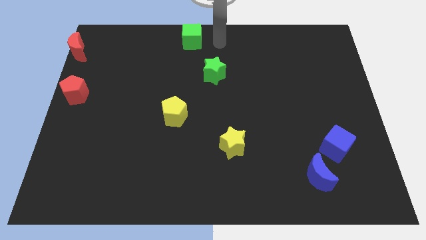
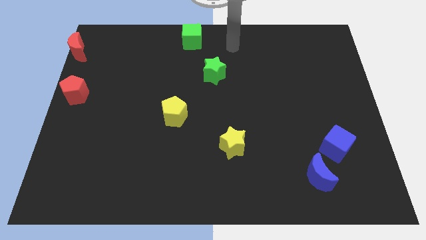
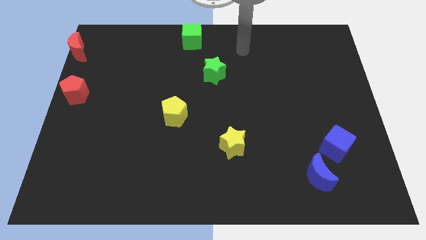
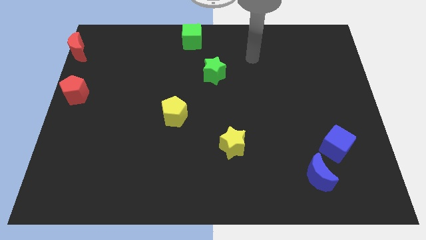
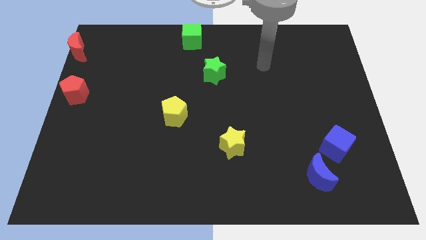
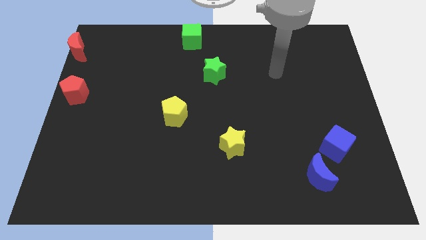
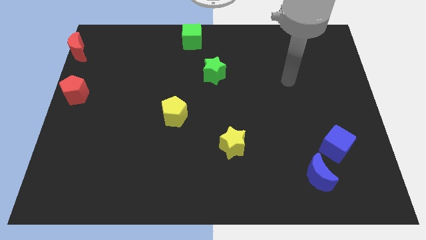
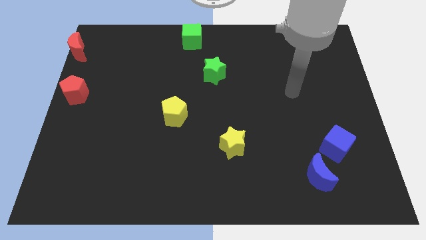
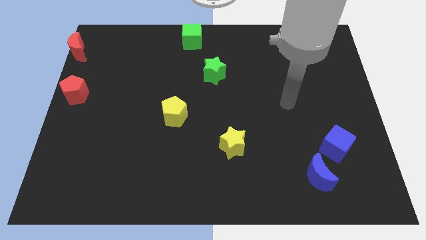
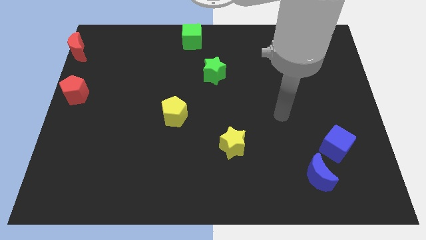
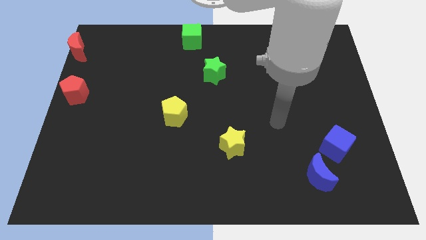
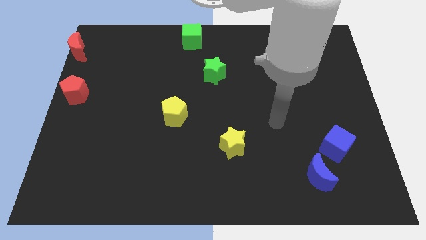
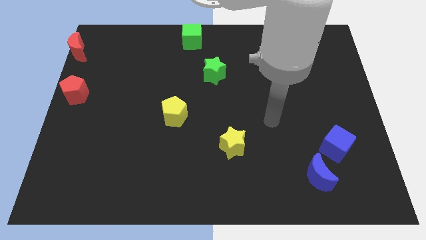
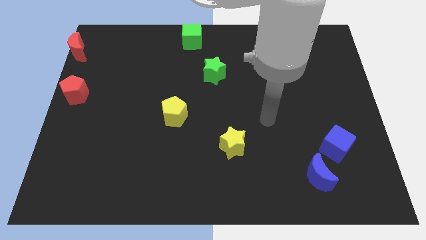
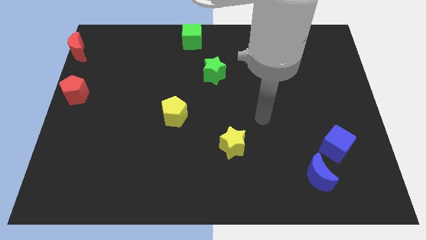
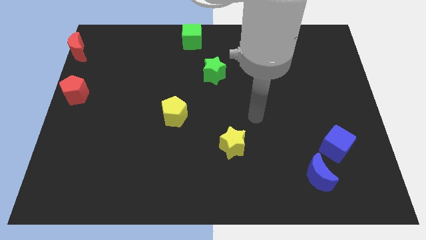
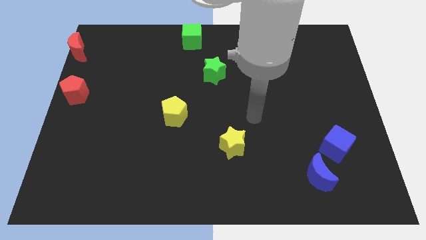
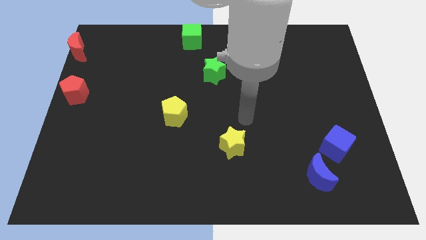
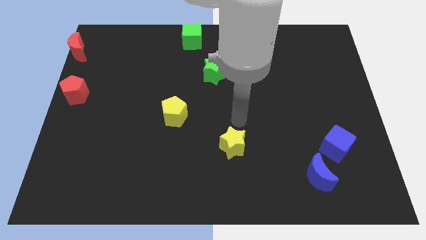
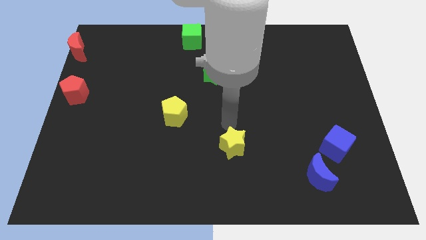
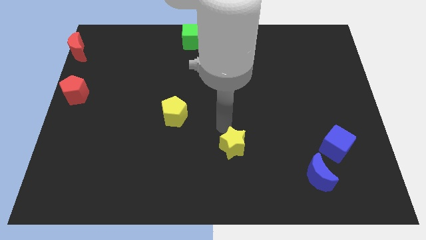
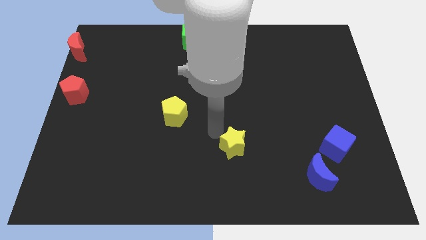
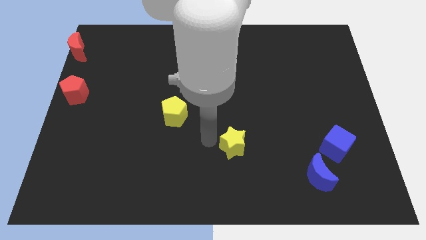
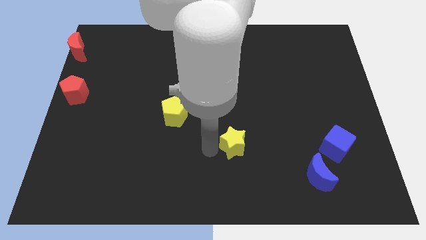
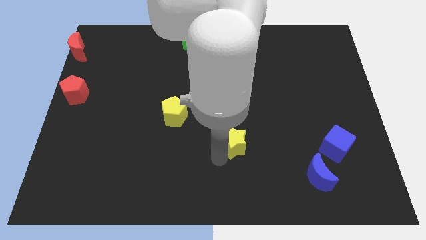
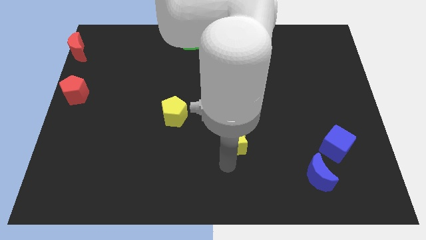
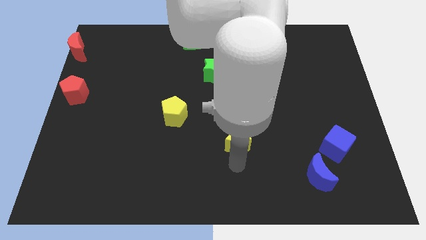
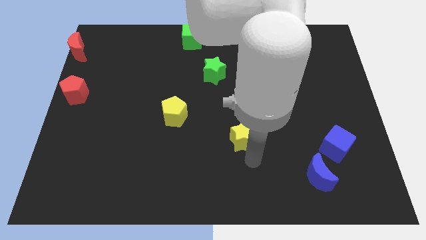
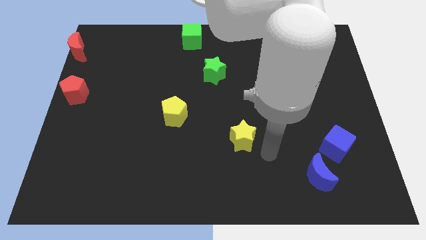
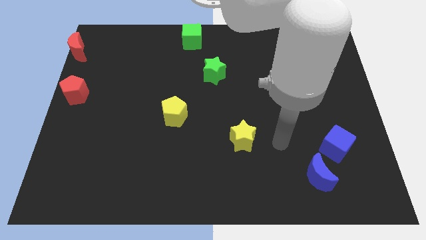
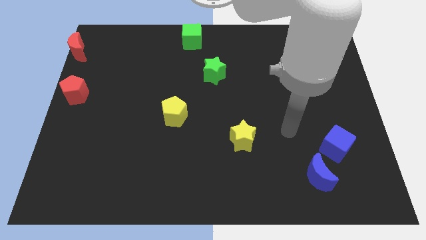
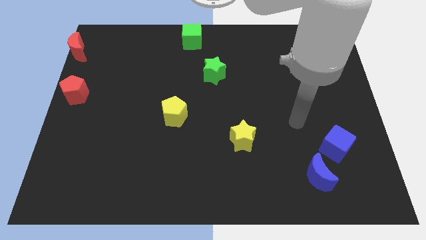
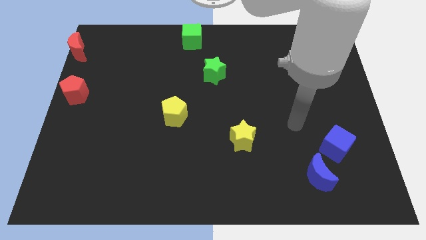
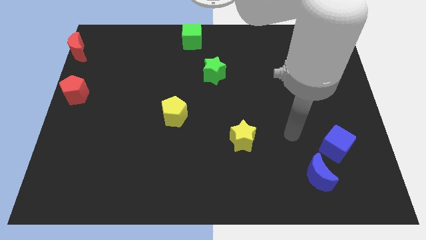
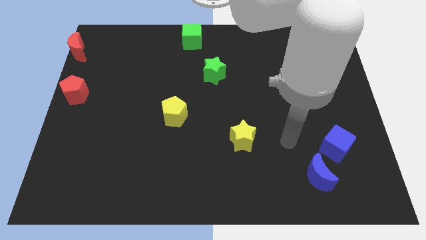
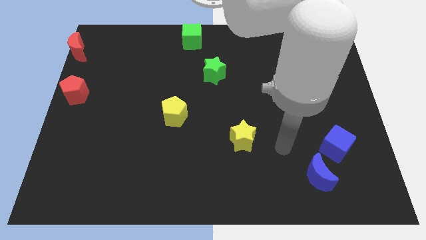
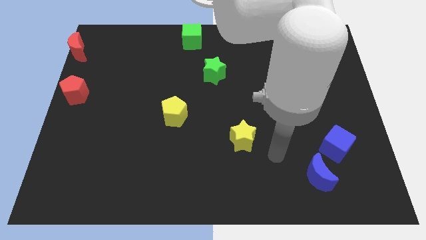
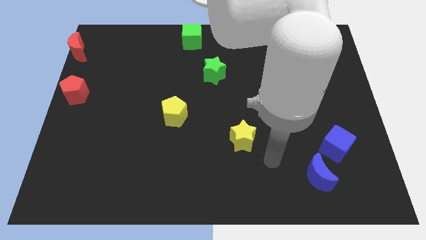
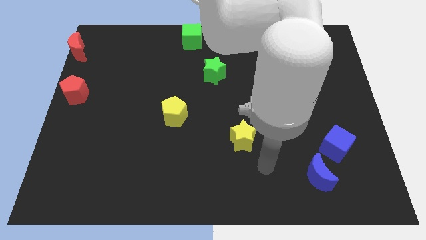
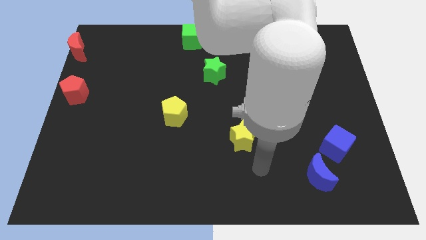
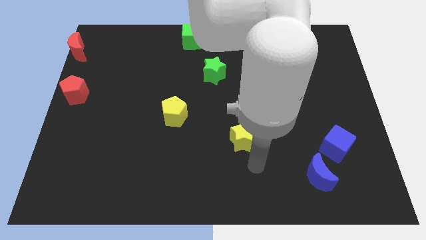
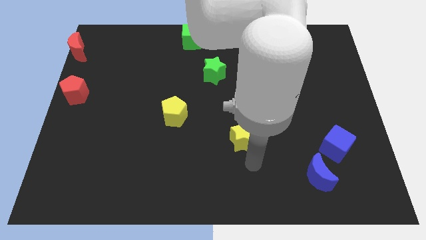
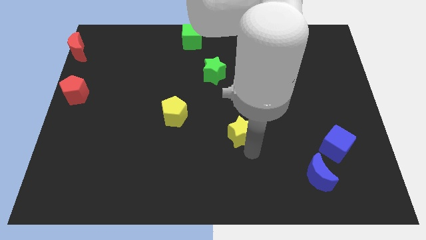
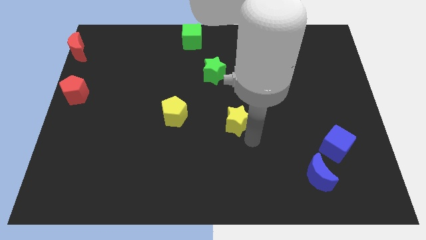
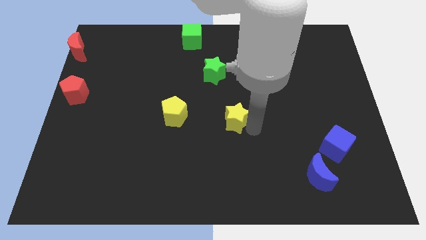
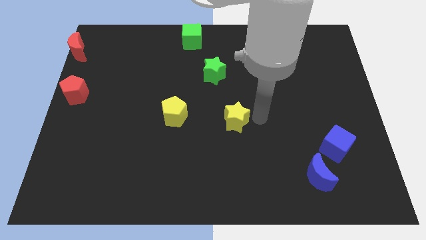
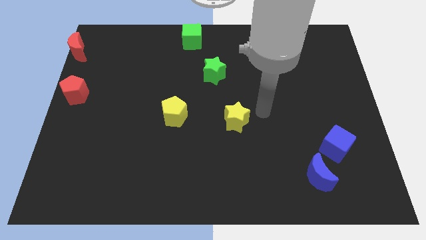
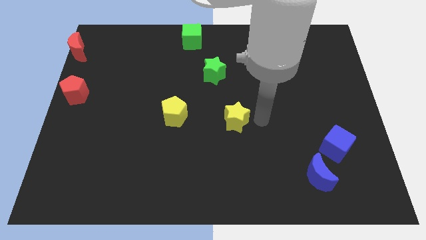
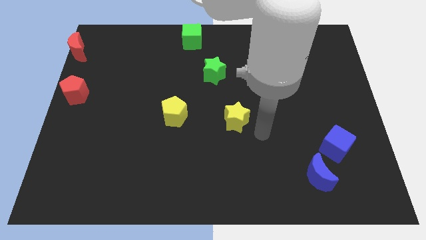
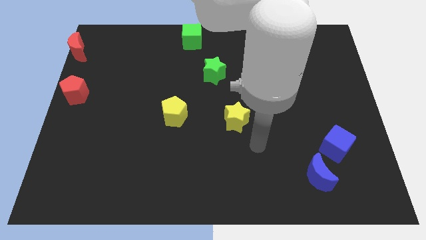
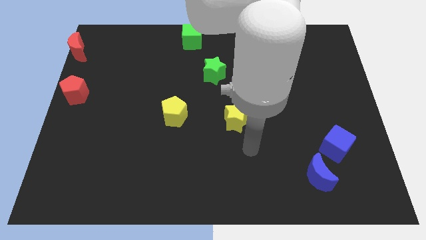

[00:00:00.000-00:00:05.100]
move yellow star to the right of yellow pentagon

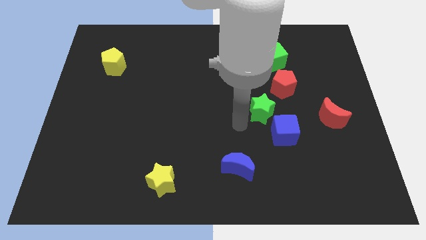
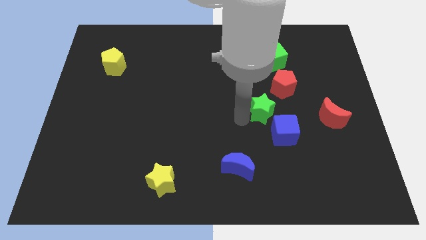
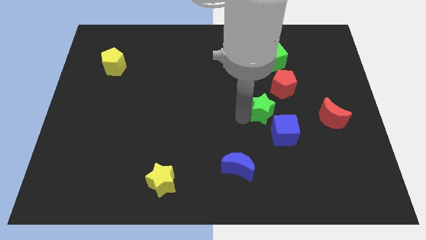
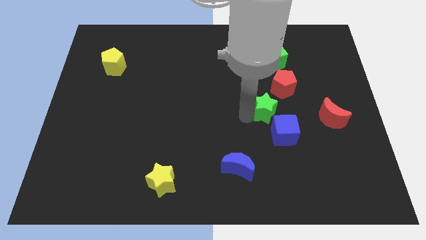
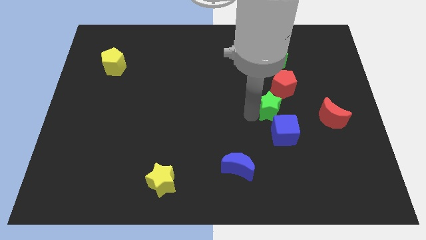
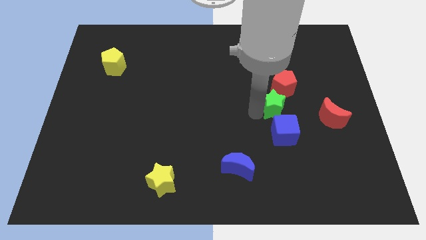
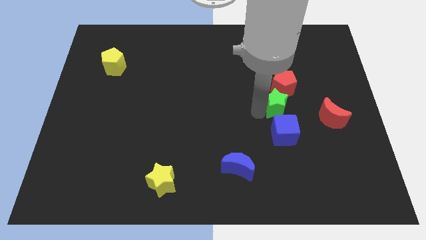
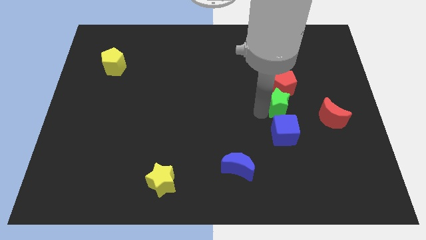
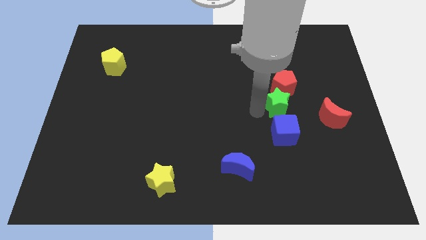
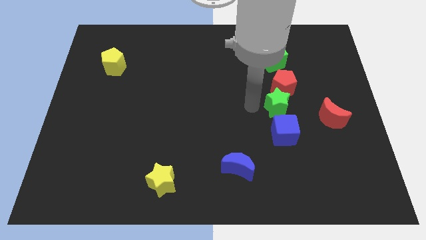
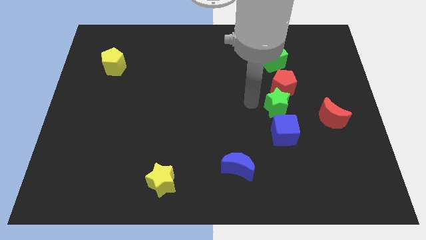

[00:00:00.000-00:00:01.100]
place the green star above the blue cube

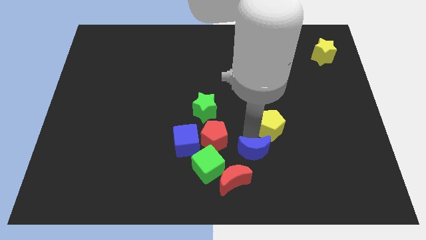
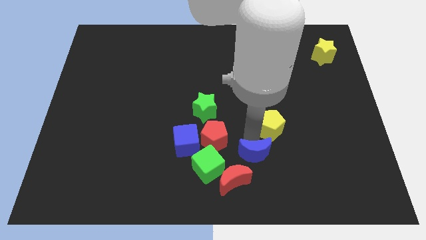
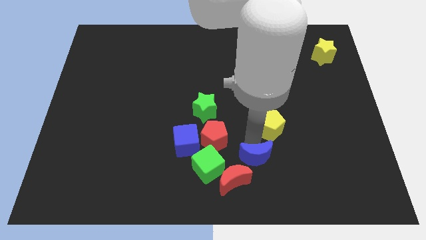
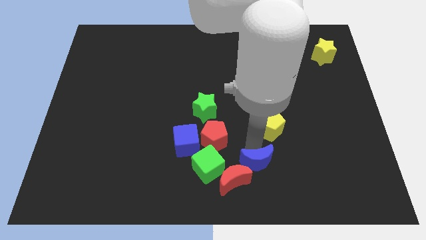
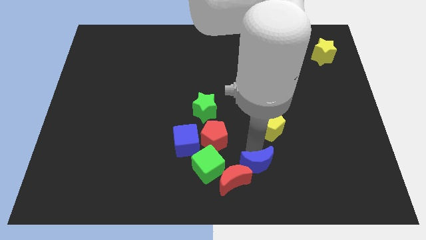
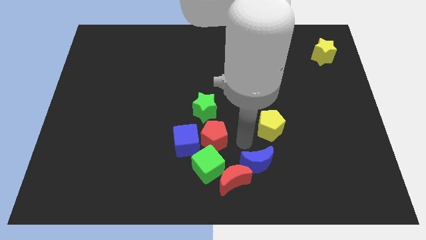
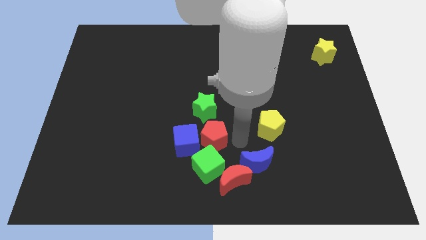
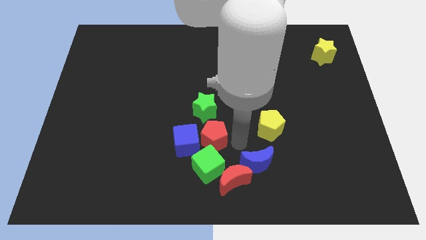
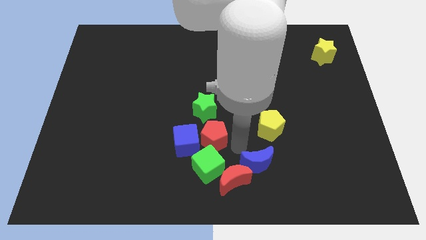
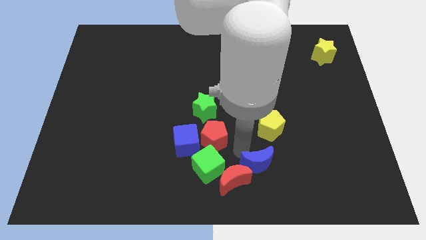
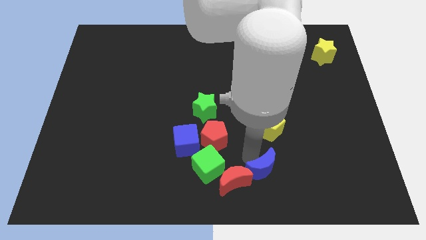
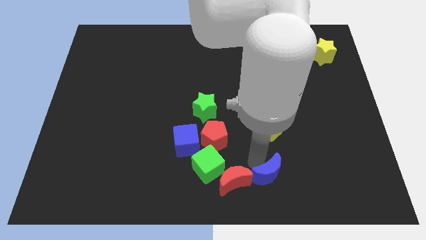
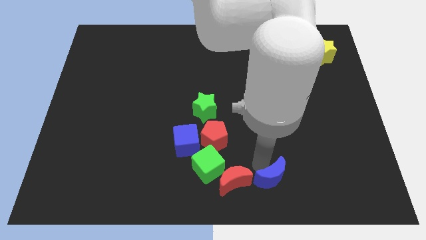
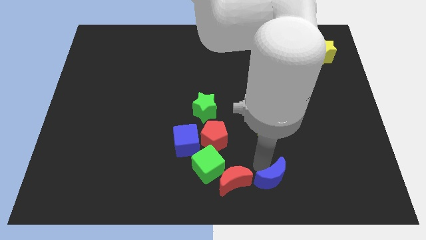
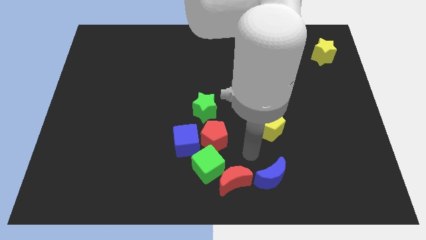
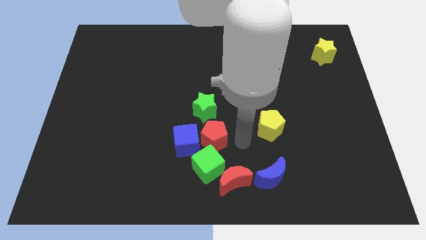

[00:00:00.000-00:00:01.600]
slightly move down the blue moon

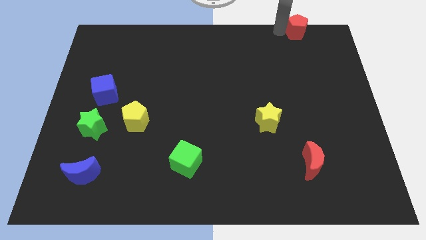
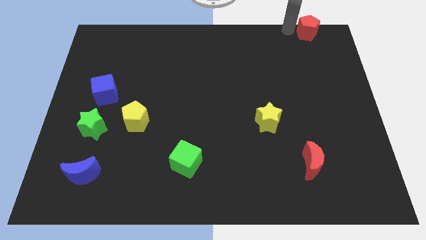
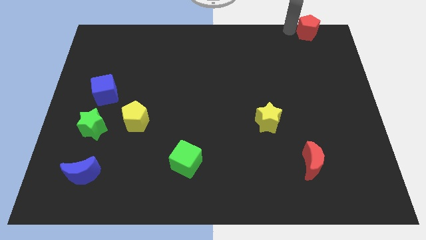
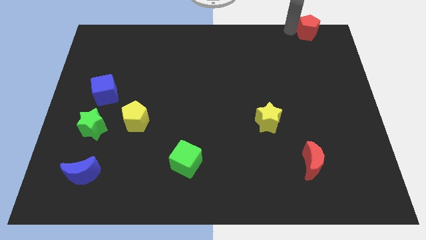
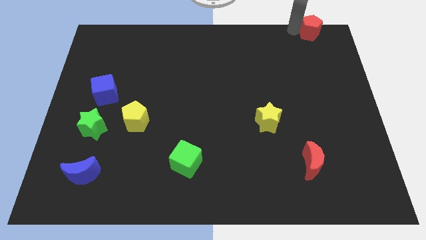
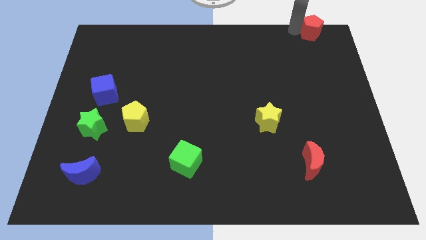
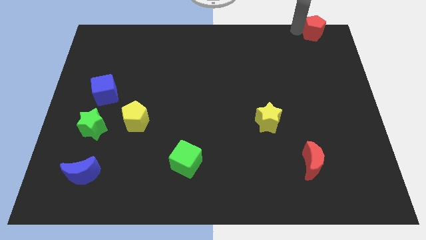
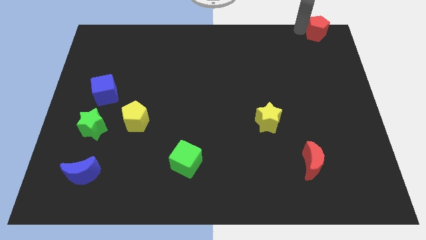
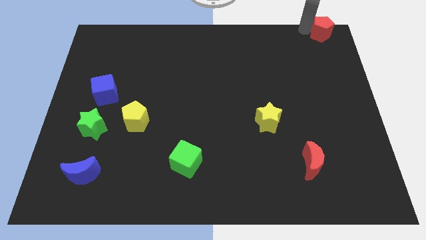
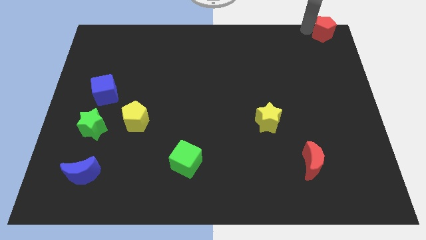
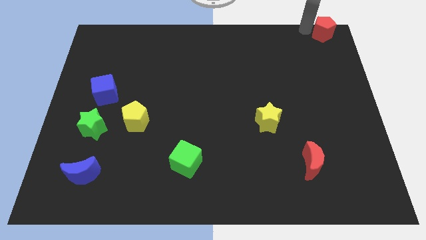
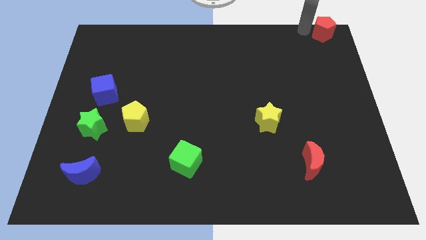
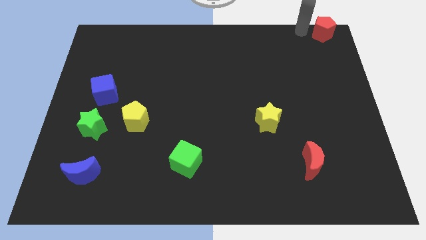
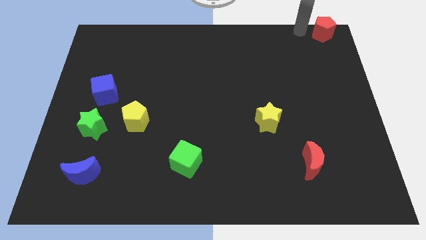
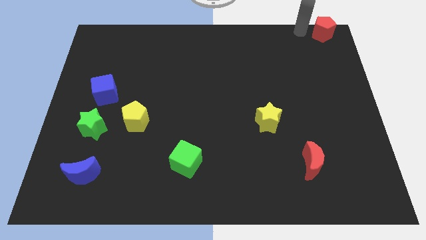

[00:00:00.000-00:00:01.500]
move red pentagon to the top right corner of the board
